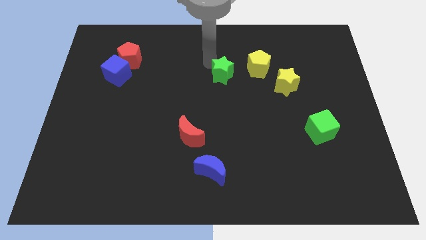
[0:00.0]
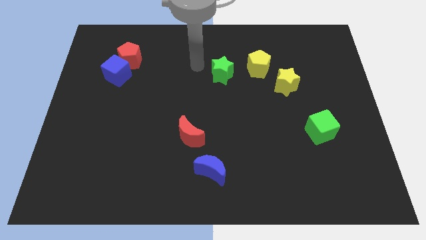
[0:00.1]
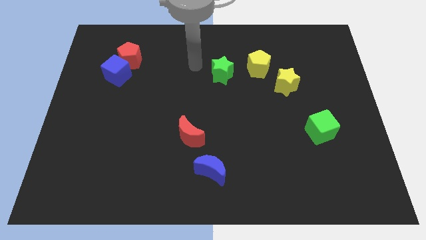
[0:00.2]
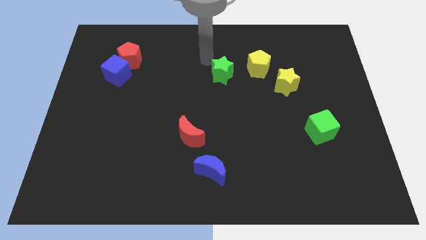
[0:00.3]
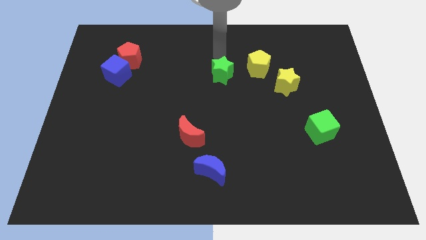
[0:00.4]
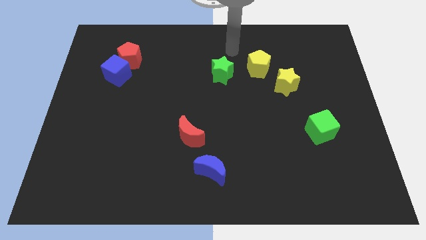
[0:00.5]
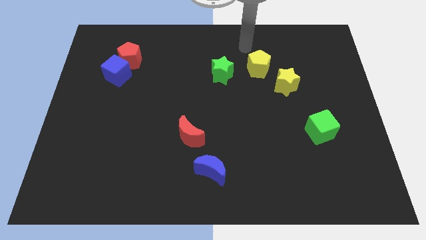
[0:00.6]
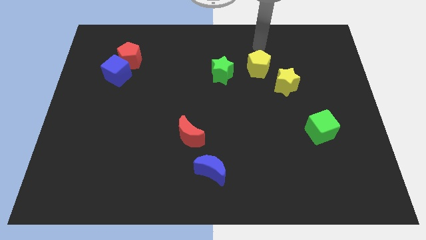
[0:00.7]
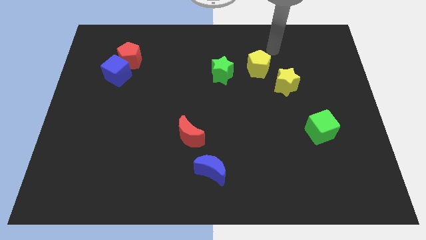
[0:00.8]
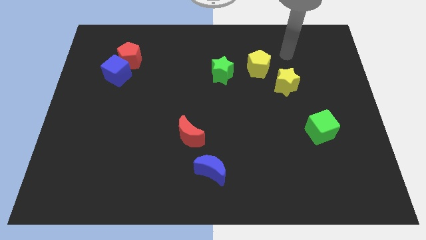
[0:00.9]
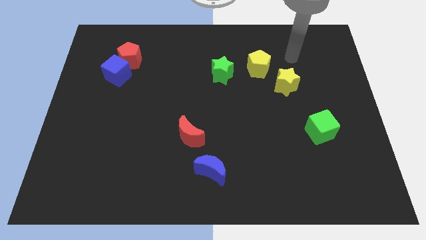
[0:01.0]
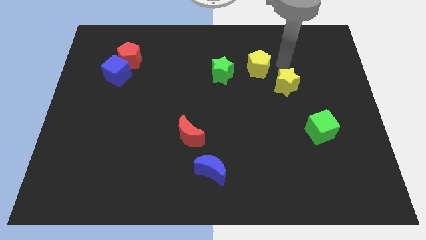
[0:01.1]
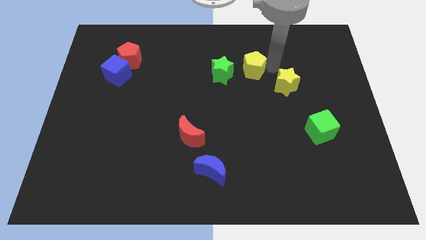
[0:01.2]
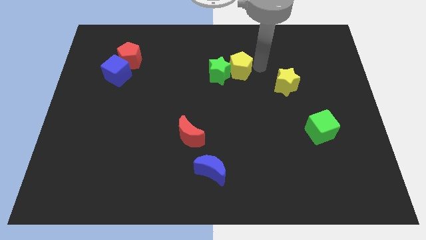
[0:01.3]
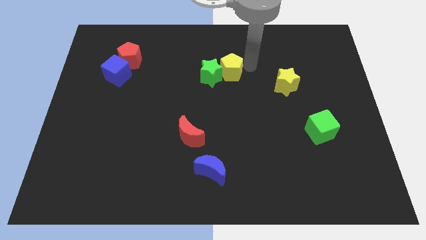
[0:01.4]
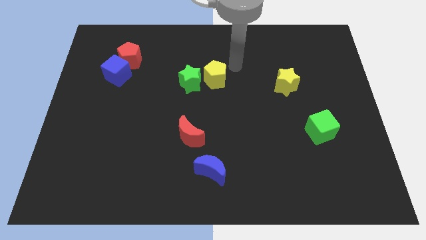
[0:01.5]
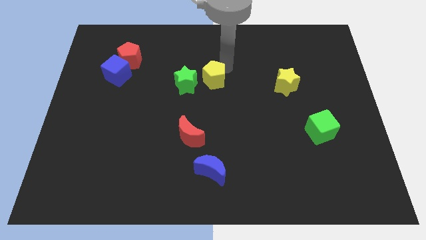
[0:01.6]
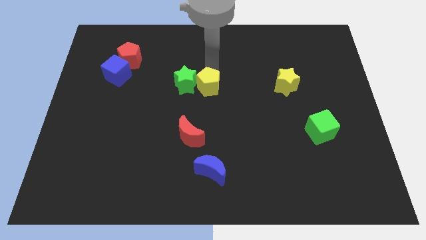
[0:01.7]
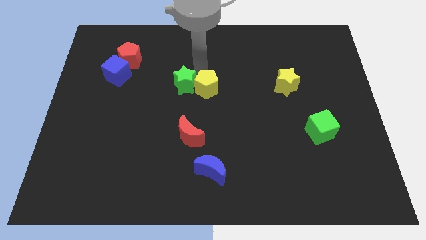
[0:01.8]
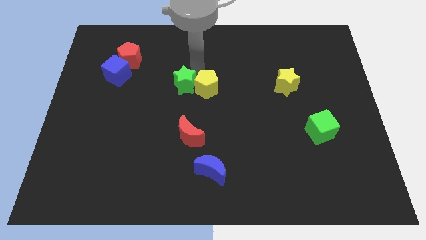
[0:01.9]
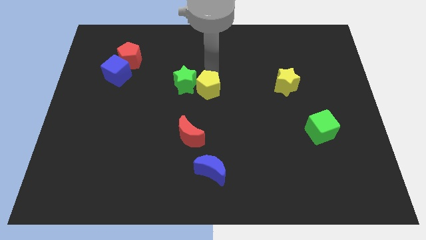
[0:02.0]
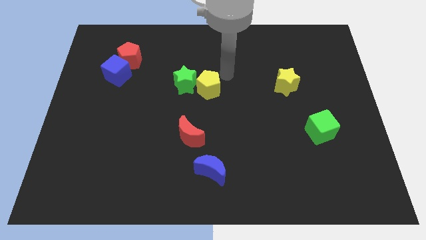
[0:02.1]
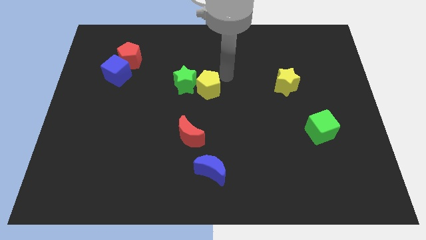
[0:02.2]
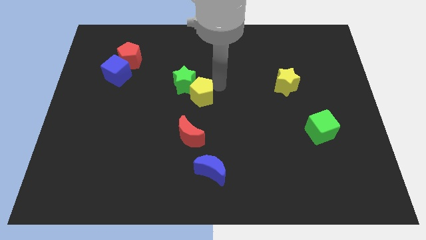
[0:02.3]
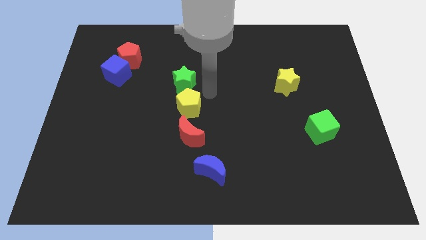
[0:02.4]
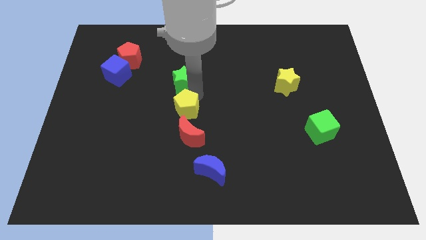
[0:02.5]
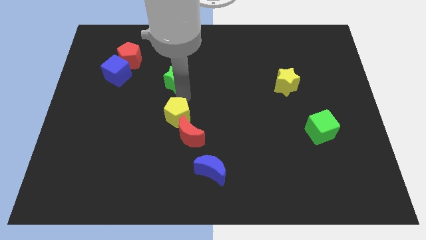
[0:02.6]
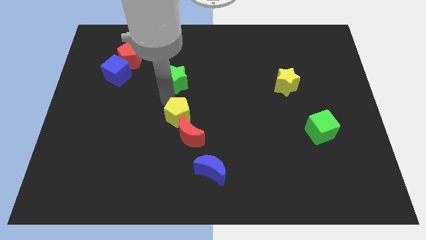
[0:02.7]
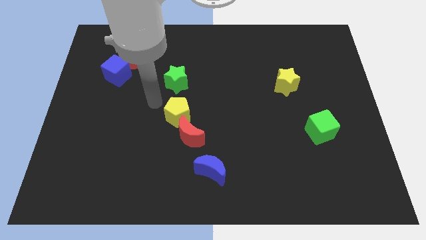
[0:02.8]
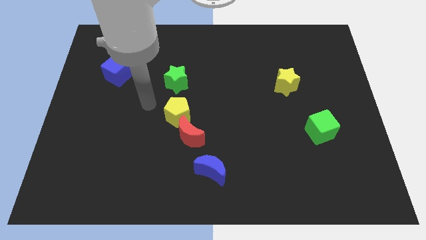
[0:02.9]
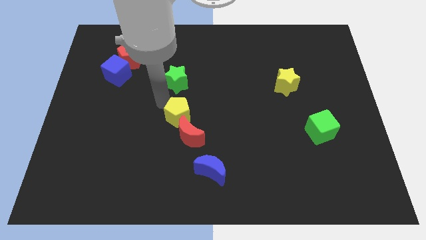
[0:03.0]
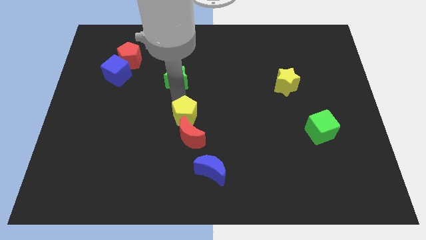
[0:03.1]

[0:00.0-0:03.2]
place yellow pentagon to the top of red moon

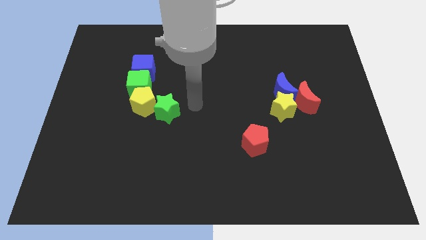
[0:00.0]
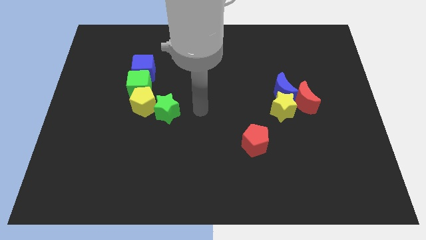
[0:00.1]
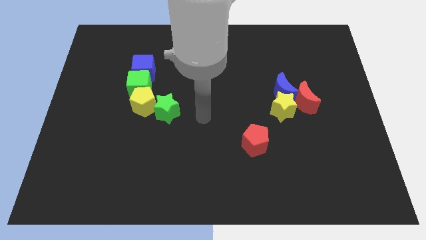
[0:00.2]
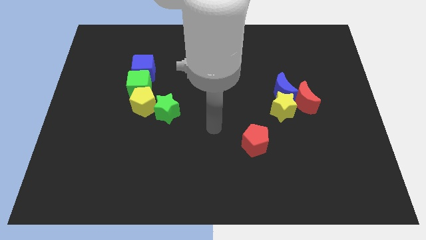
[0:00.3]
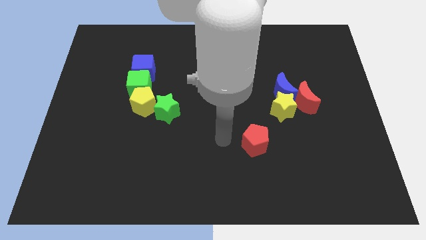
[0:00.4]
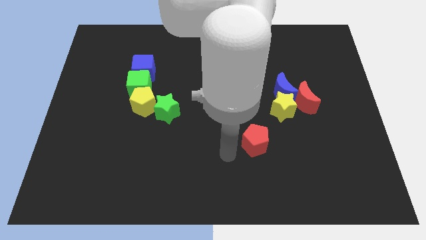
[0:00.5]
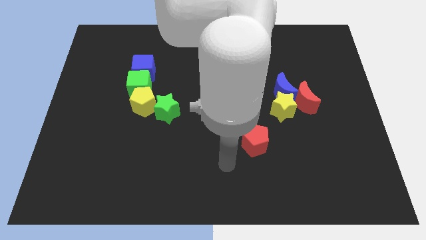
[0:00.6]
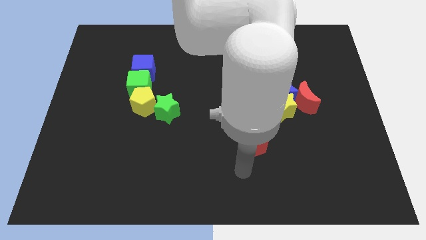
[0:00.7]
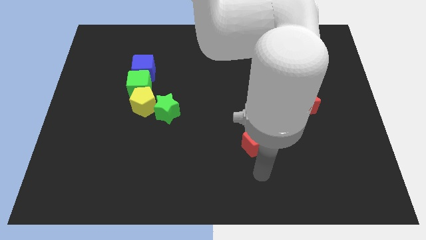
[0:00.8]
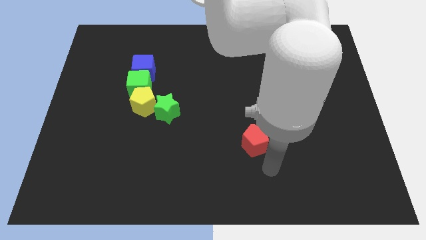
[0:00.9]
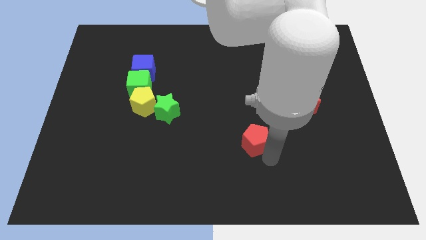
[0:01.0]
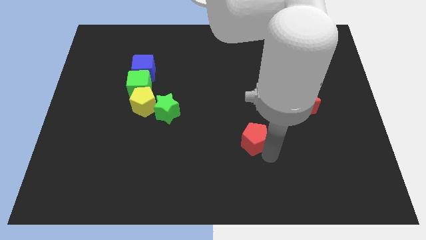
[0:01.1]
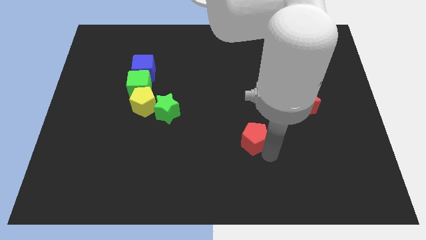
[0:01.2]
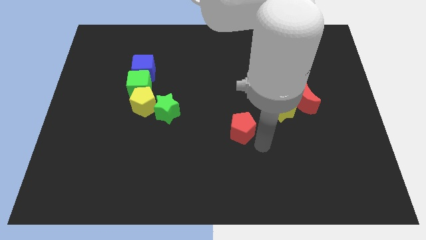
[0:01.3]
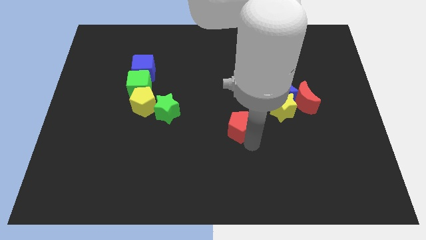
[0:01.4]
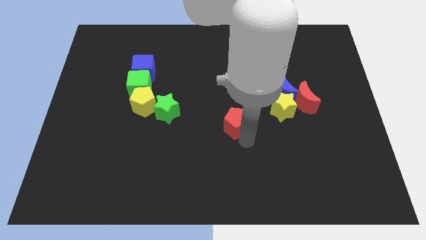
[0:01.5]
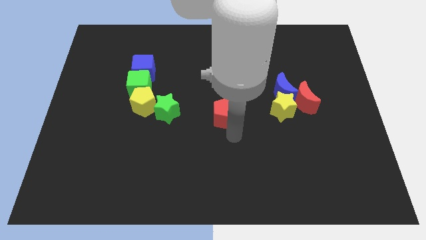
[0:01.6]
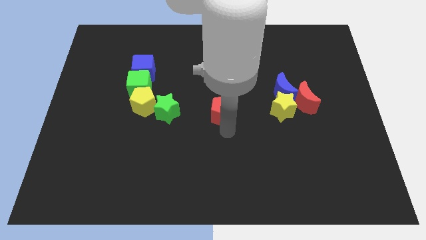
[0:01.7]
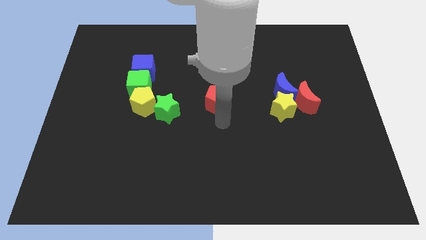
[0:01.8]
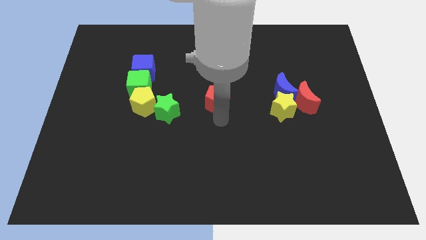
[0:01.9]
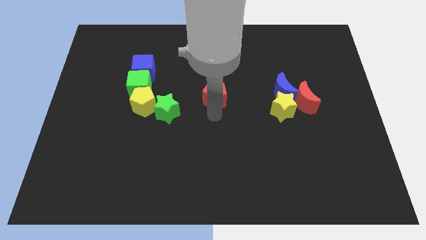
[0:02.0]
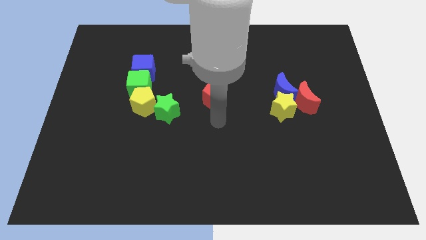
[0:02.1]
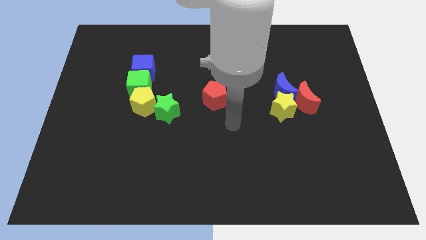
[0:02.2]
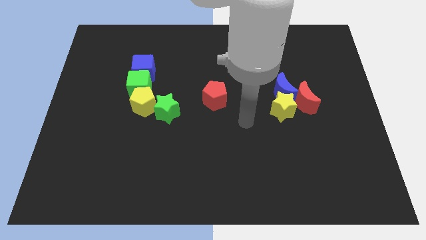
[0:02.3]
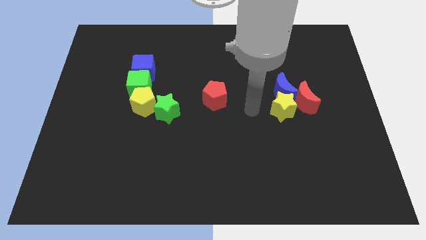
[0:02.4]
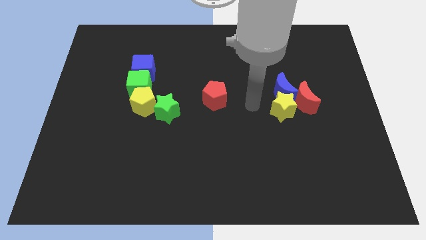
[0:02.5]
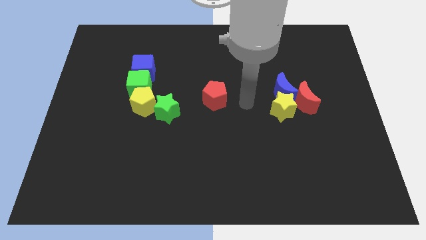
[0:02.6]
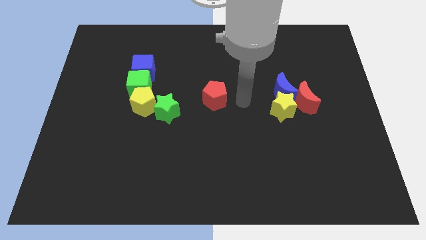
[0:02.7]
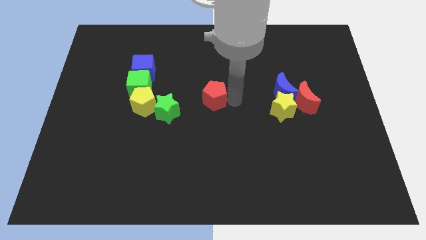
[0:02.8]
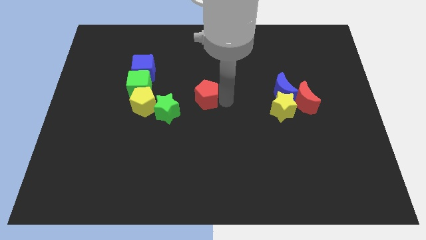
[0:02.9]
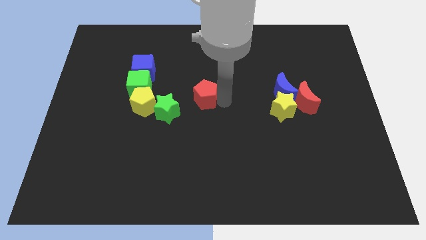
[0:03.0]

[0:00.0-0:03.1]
slide the red pentagon towards the right side of the green star

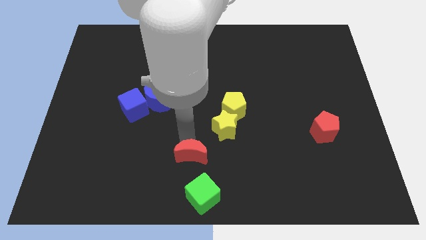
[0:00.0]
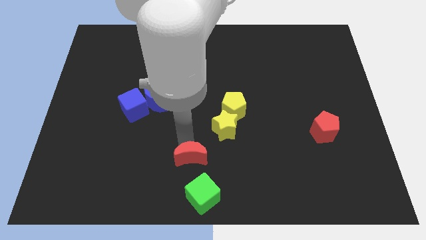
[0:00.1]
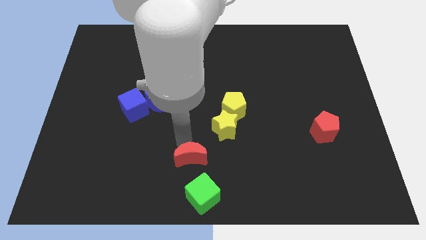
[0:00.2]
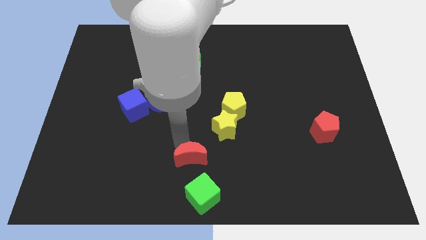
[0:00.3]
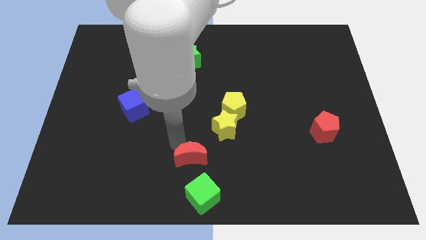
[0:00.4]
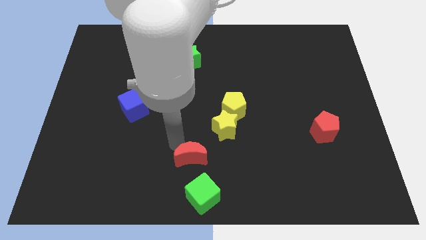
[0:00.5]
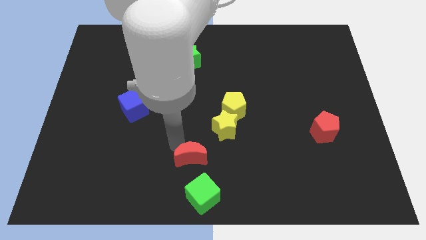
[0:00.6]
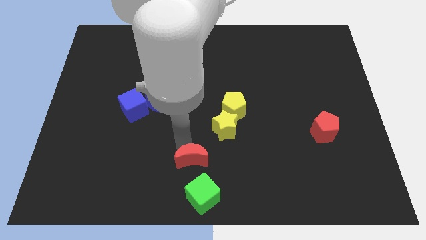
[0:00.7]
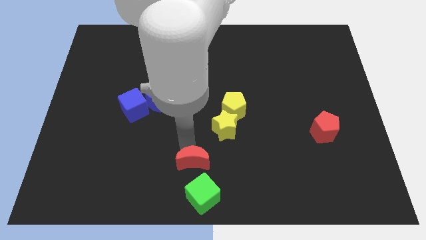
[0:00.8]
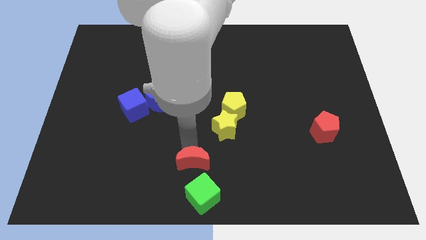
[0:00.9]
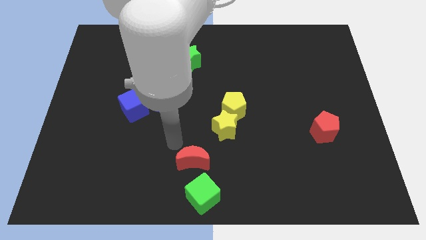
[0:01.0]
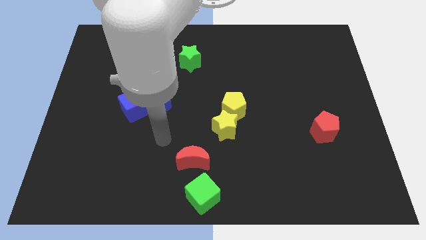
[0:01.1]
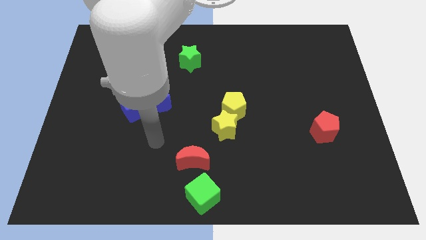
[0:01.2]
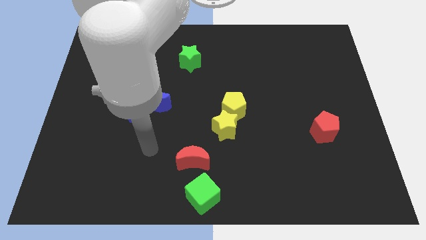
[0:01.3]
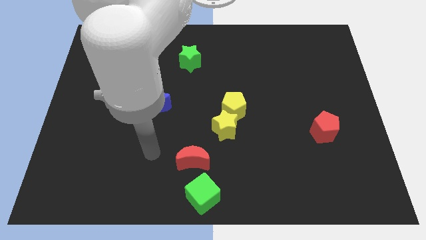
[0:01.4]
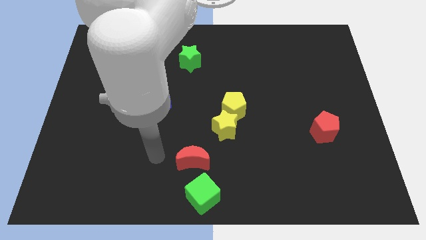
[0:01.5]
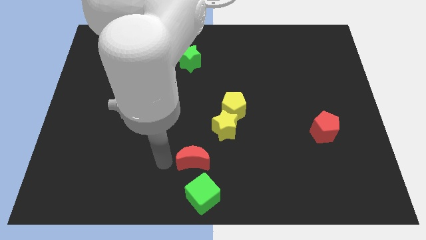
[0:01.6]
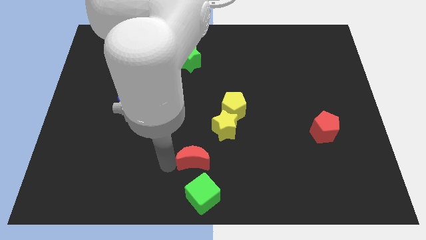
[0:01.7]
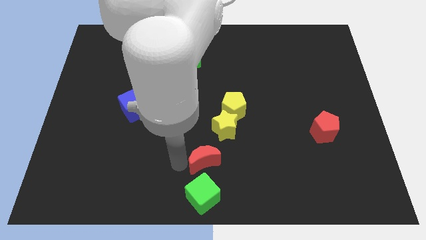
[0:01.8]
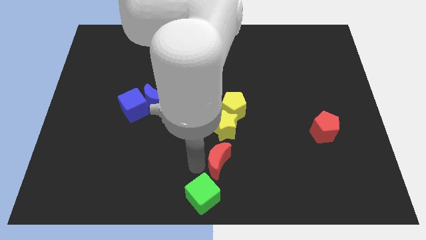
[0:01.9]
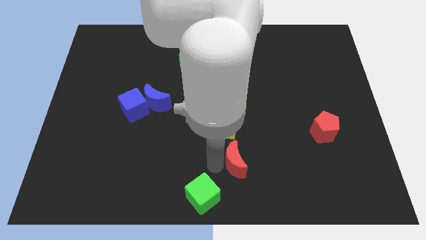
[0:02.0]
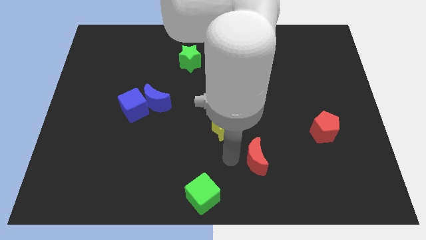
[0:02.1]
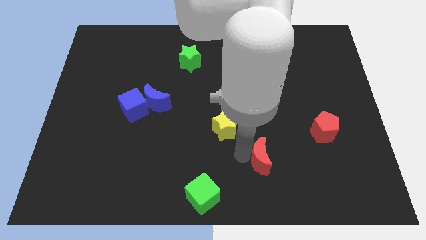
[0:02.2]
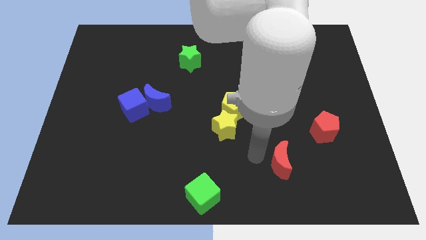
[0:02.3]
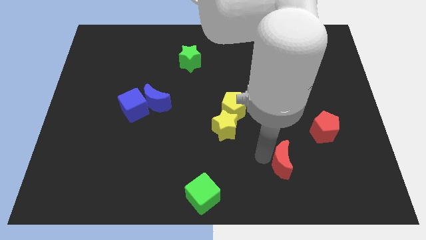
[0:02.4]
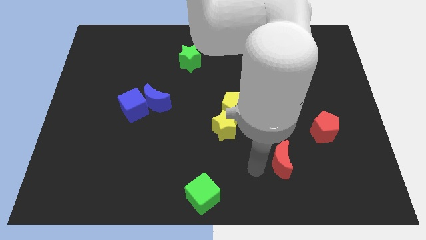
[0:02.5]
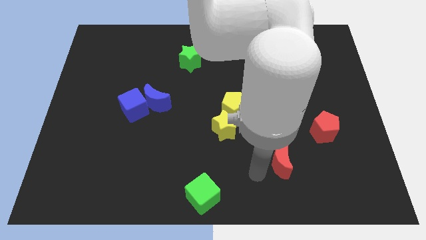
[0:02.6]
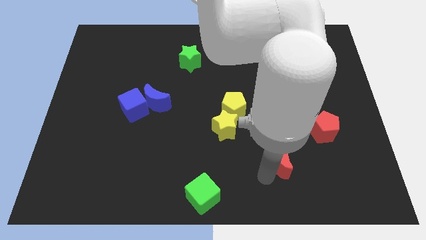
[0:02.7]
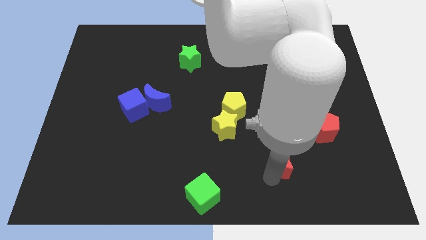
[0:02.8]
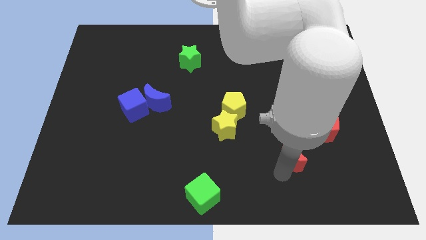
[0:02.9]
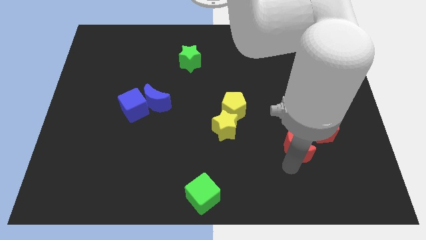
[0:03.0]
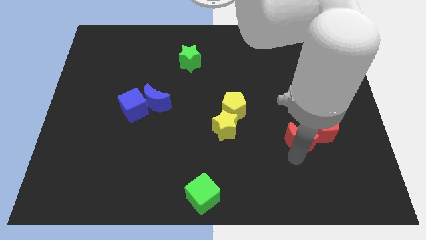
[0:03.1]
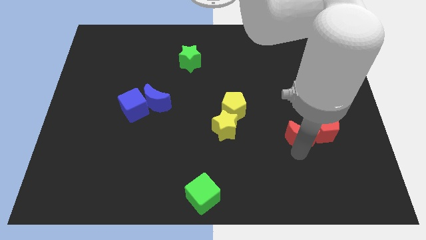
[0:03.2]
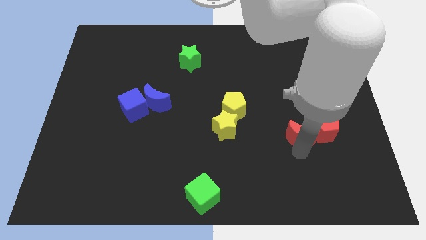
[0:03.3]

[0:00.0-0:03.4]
place the red moon to the left side of the red pentagon
